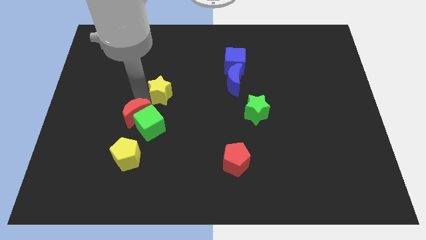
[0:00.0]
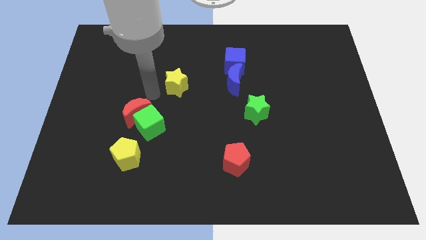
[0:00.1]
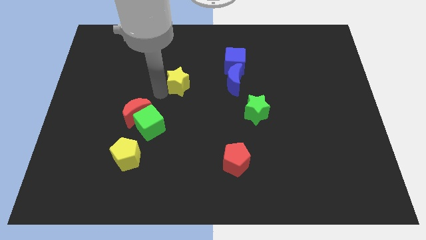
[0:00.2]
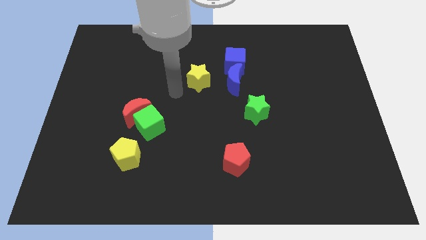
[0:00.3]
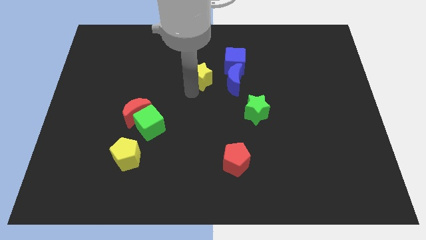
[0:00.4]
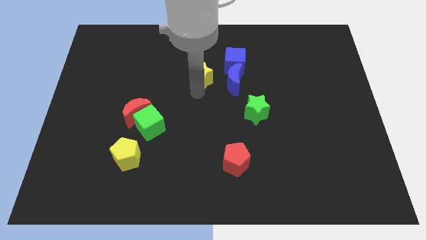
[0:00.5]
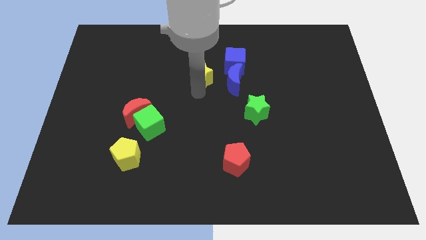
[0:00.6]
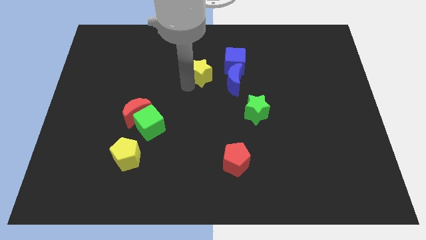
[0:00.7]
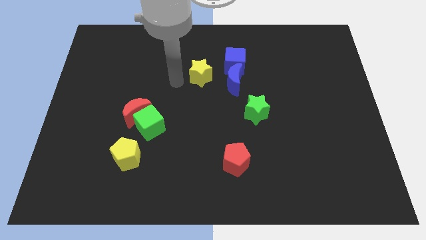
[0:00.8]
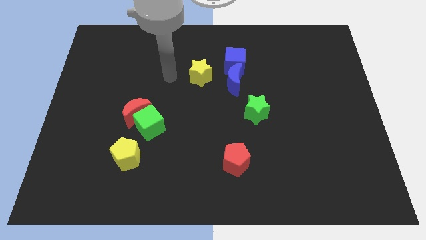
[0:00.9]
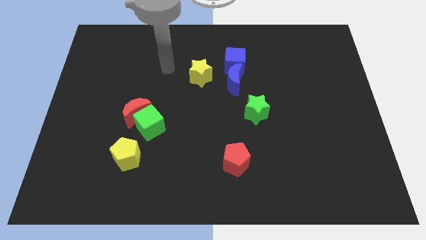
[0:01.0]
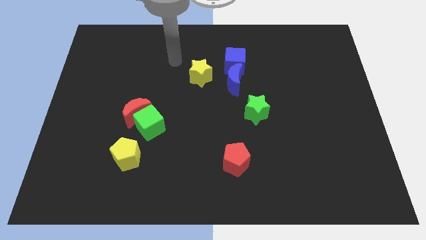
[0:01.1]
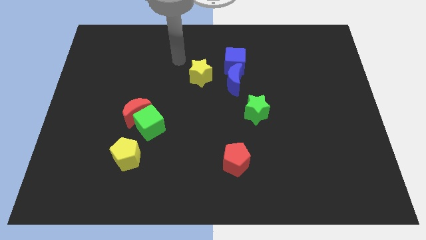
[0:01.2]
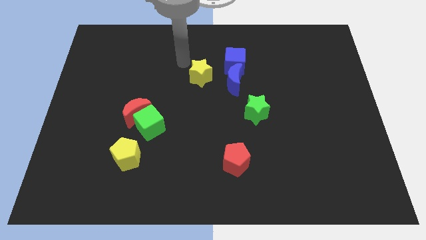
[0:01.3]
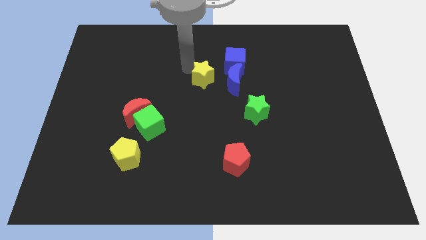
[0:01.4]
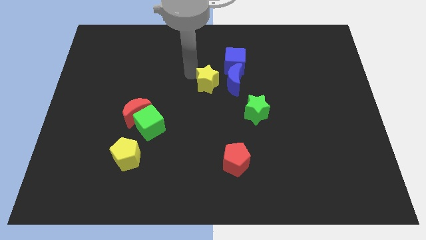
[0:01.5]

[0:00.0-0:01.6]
move the yellow star towards the blue blocks

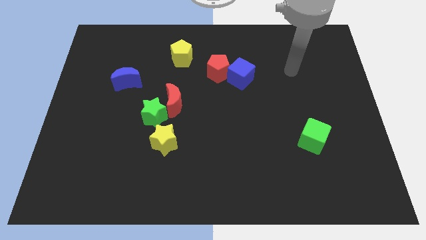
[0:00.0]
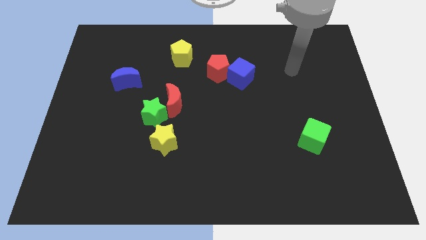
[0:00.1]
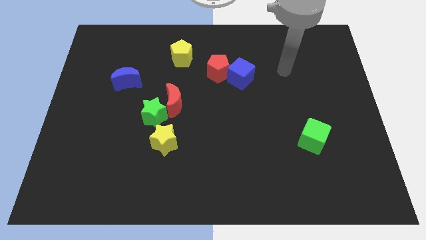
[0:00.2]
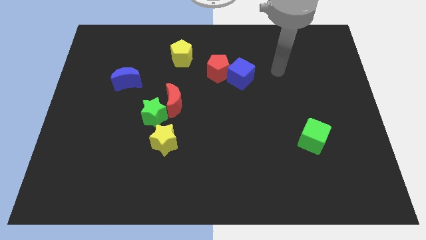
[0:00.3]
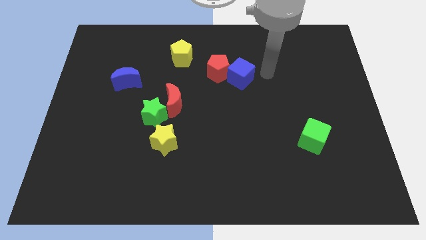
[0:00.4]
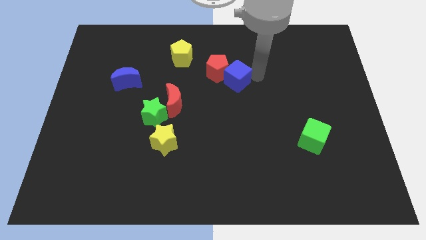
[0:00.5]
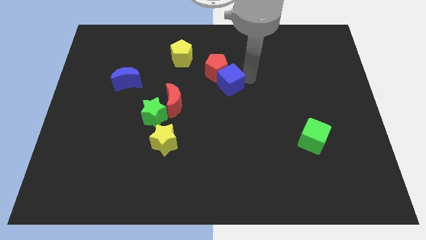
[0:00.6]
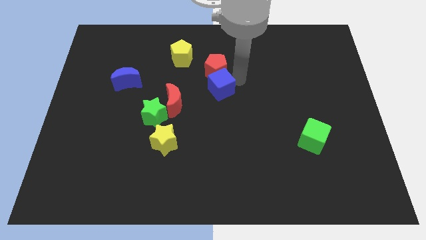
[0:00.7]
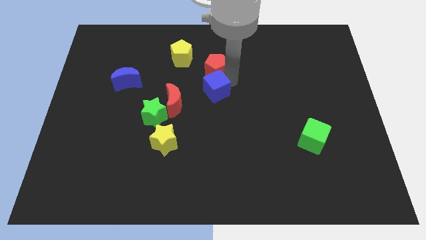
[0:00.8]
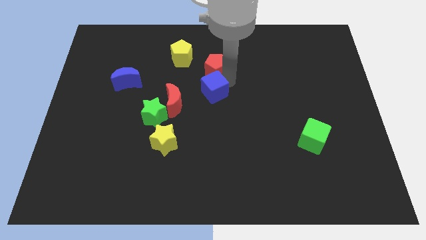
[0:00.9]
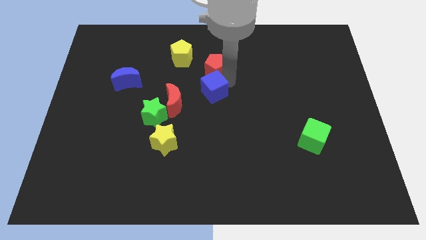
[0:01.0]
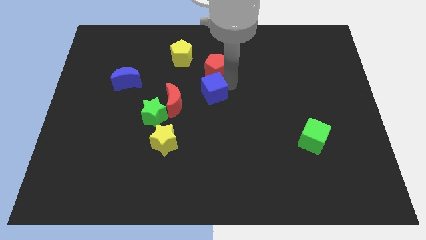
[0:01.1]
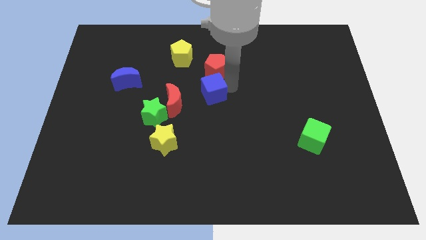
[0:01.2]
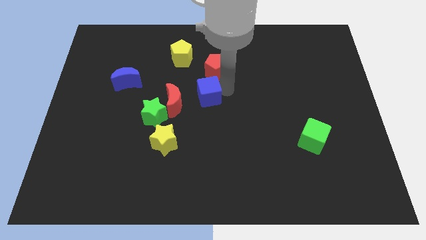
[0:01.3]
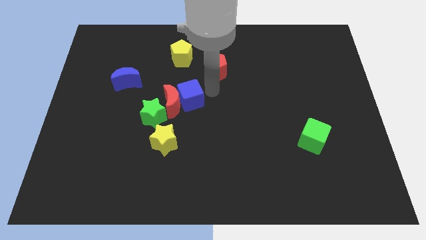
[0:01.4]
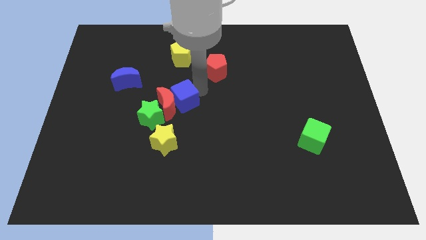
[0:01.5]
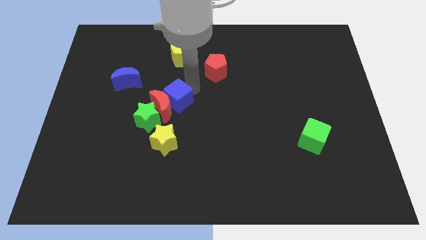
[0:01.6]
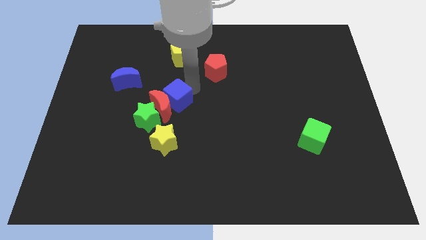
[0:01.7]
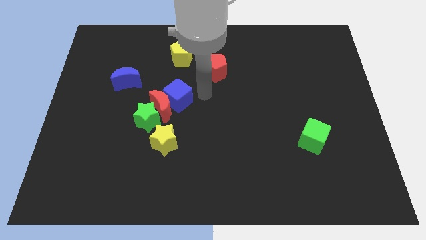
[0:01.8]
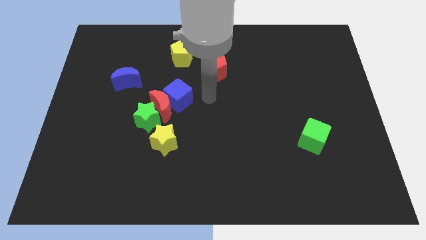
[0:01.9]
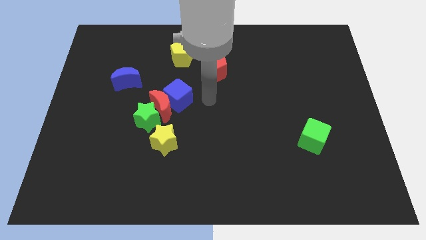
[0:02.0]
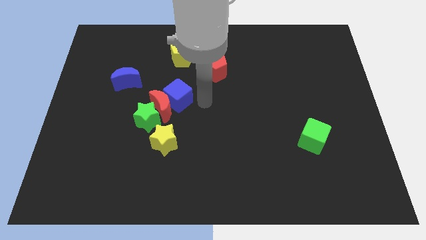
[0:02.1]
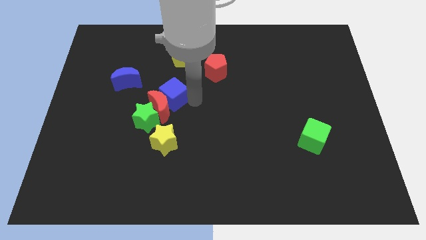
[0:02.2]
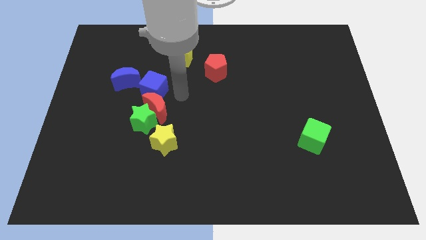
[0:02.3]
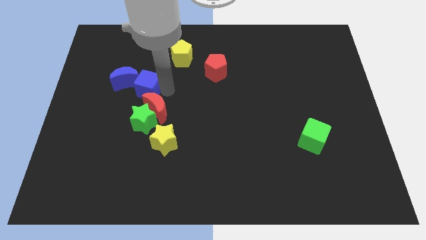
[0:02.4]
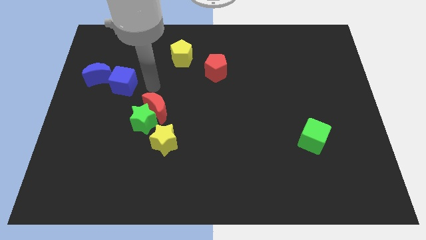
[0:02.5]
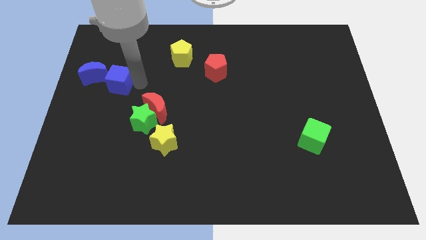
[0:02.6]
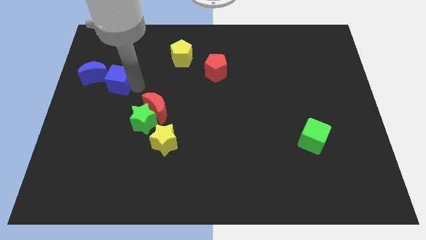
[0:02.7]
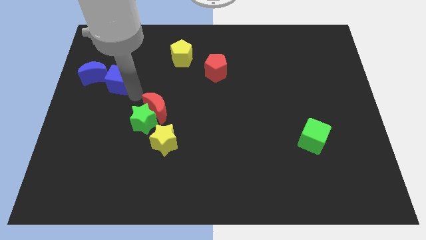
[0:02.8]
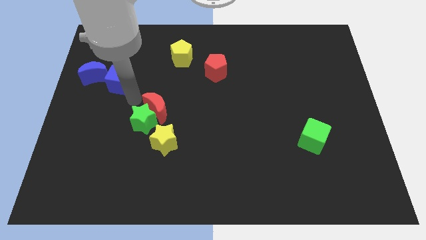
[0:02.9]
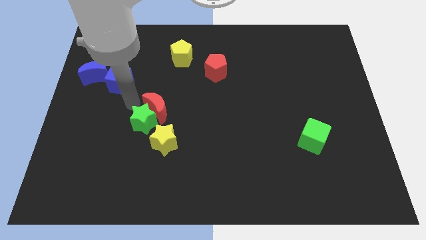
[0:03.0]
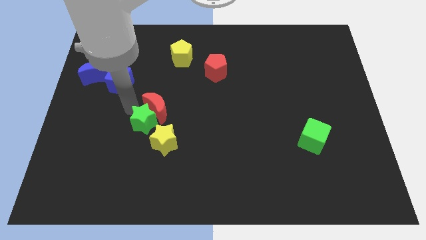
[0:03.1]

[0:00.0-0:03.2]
place the both blue cube and blue crescent to the left center of the board

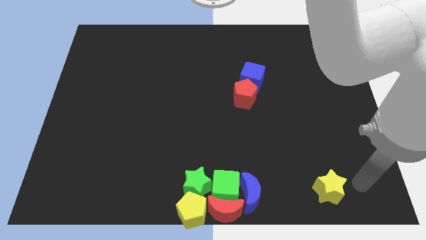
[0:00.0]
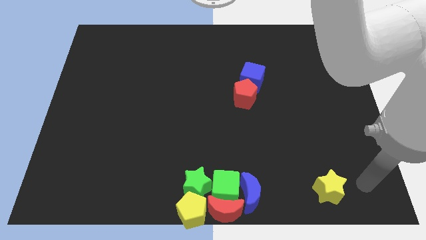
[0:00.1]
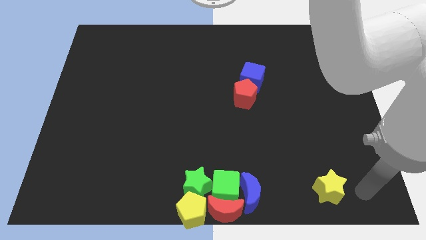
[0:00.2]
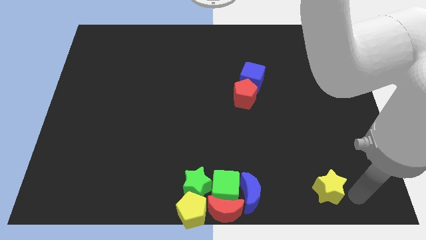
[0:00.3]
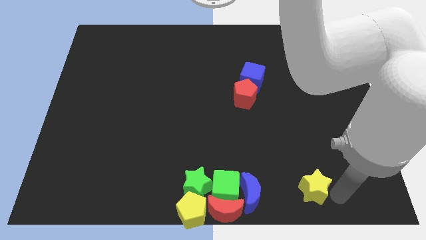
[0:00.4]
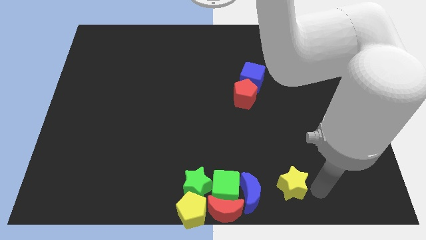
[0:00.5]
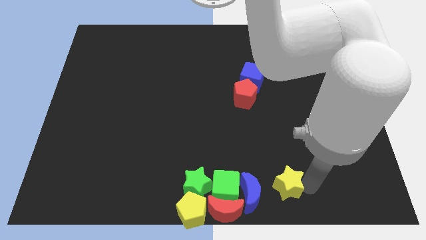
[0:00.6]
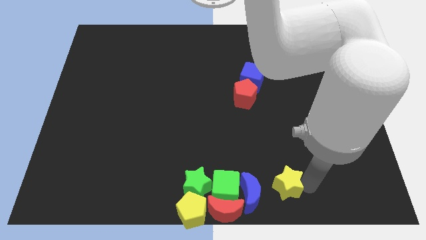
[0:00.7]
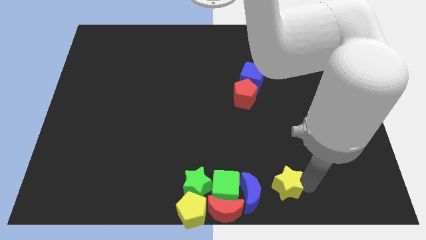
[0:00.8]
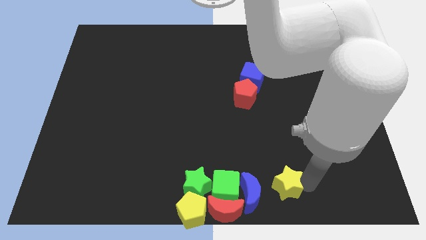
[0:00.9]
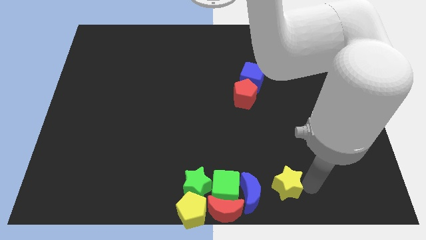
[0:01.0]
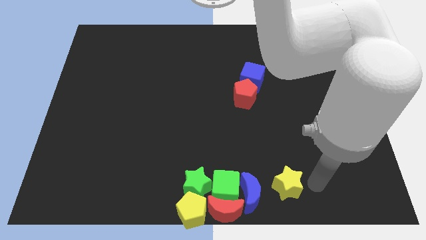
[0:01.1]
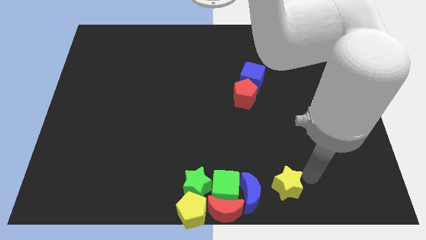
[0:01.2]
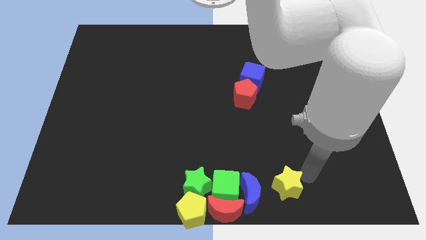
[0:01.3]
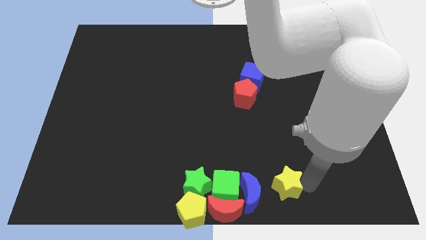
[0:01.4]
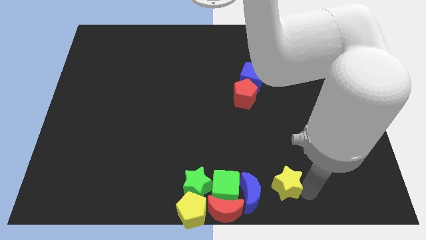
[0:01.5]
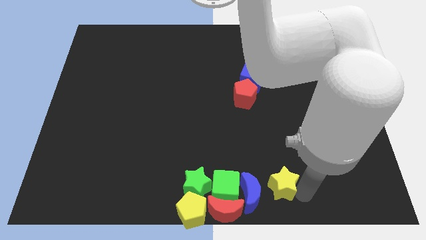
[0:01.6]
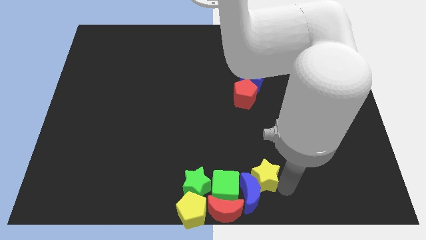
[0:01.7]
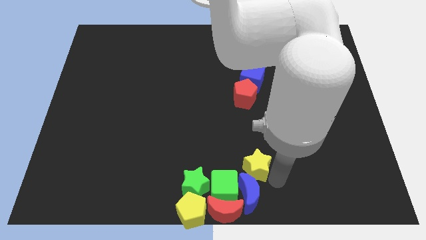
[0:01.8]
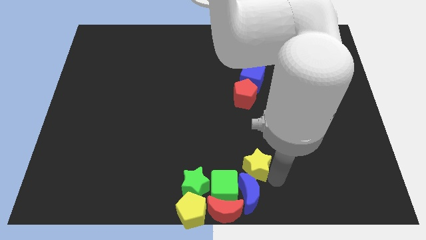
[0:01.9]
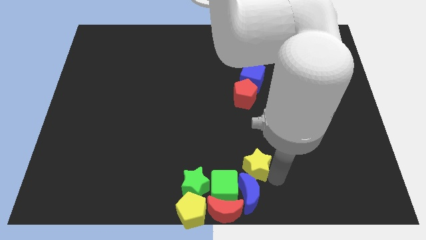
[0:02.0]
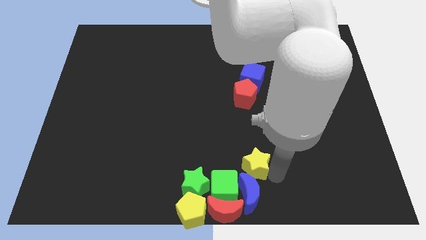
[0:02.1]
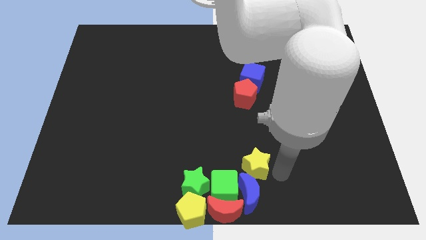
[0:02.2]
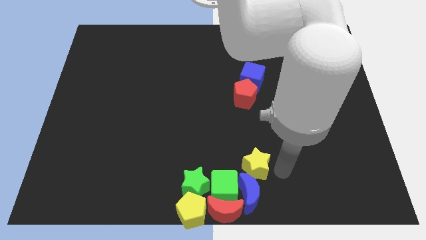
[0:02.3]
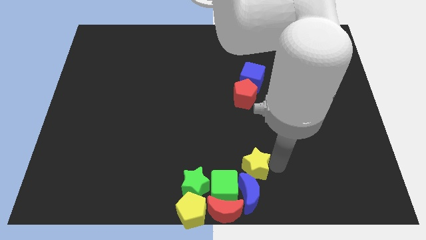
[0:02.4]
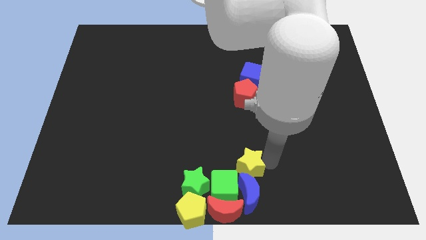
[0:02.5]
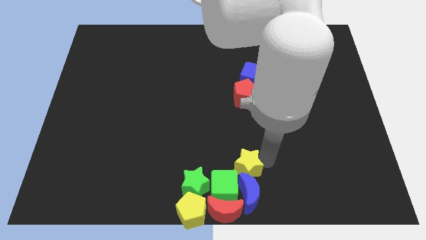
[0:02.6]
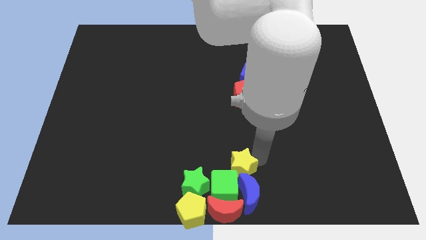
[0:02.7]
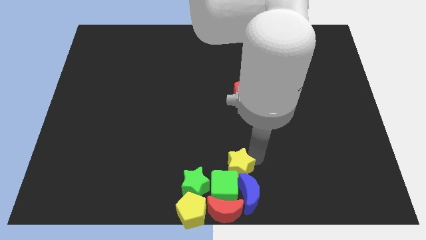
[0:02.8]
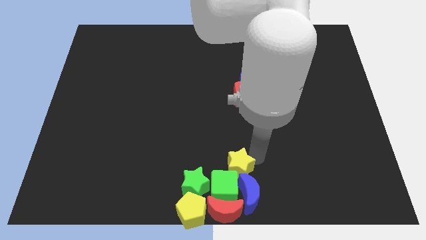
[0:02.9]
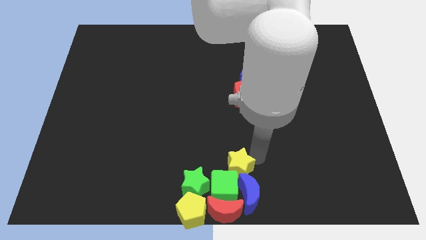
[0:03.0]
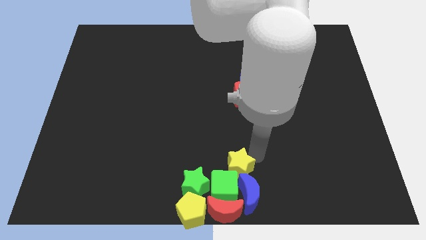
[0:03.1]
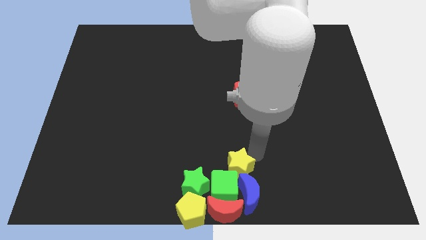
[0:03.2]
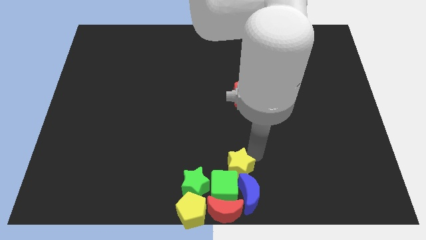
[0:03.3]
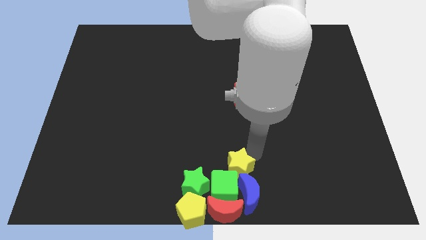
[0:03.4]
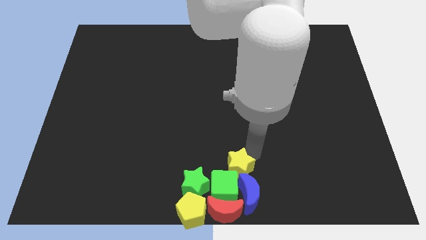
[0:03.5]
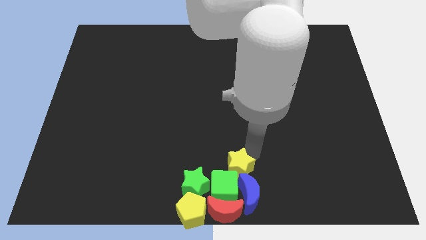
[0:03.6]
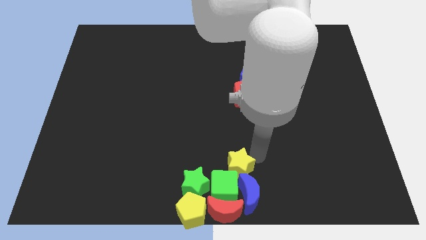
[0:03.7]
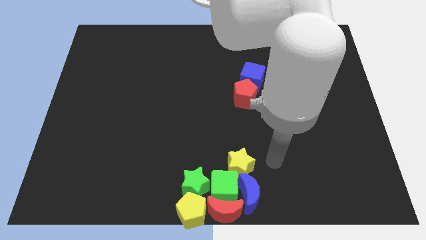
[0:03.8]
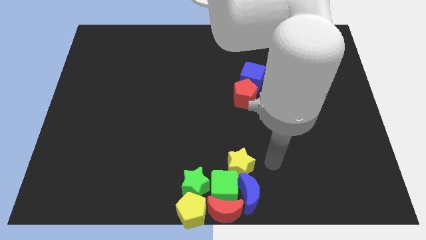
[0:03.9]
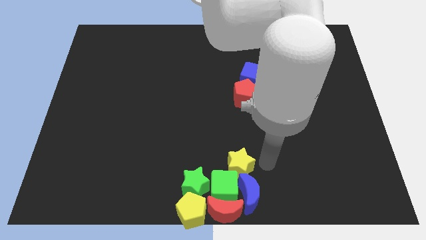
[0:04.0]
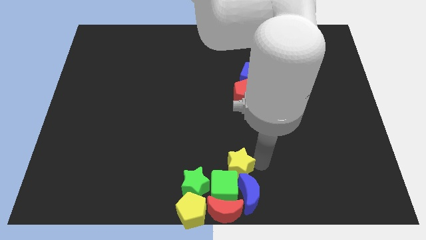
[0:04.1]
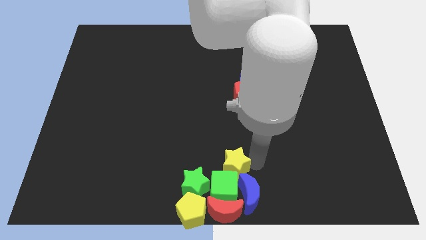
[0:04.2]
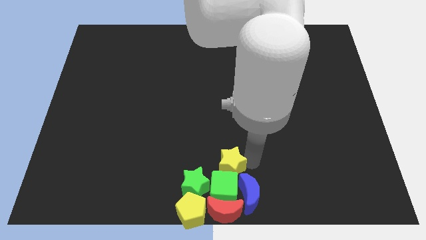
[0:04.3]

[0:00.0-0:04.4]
push the yellow star into the group of blocks
